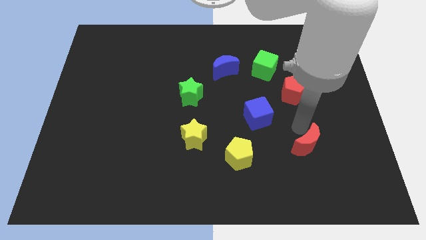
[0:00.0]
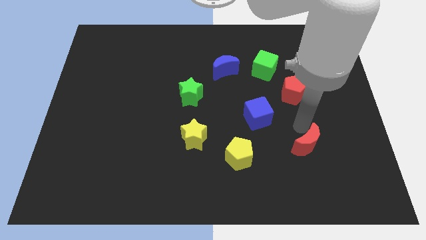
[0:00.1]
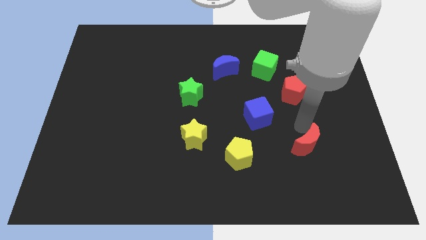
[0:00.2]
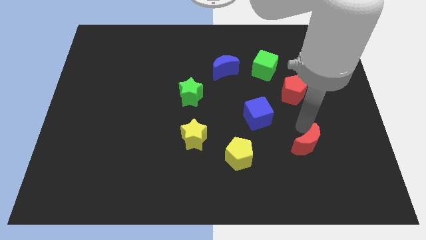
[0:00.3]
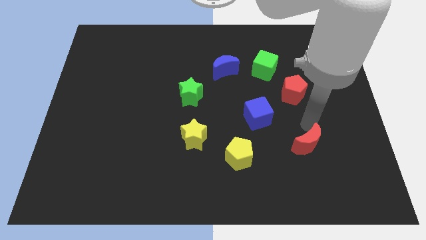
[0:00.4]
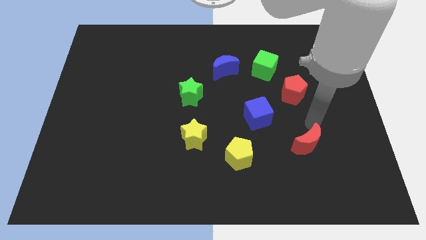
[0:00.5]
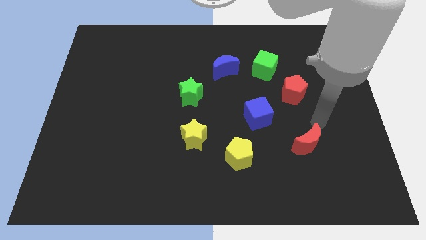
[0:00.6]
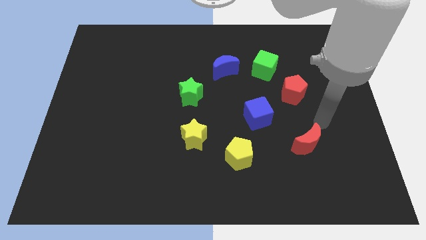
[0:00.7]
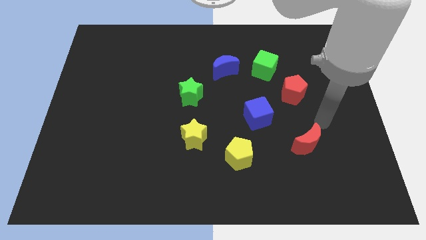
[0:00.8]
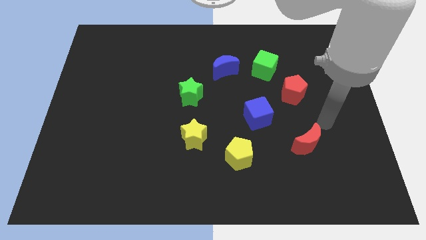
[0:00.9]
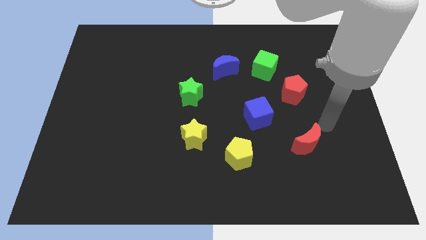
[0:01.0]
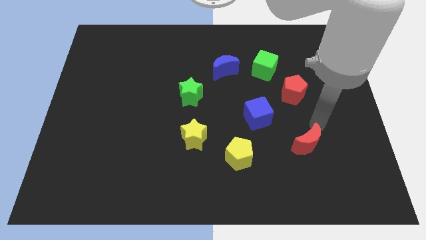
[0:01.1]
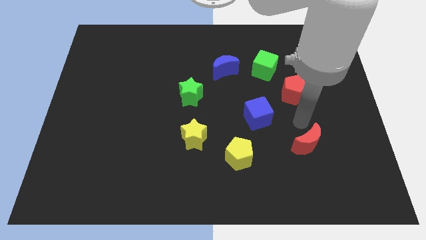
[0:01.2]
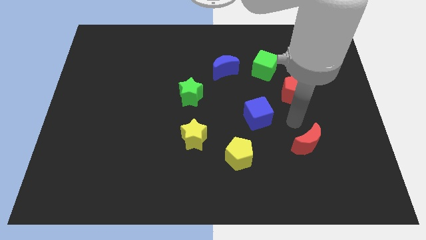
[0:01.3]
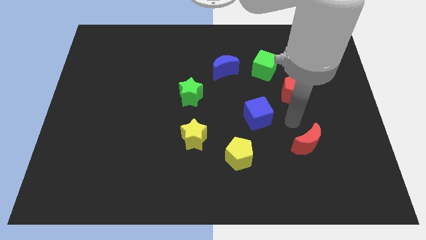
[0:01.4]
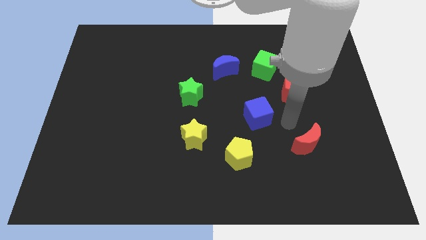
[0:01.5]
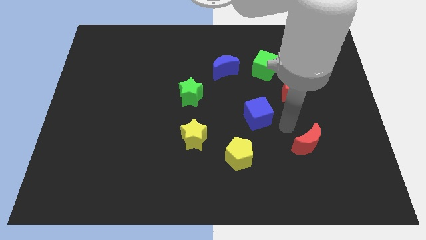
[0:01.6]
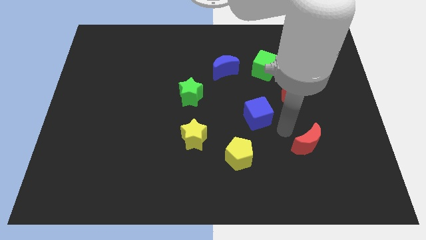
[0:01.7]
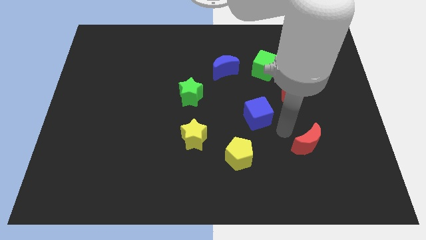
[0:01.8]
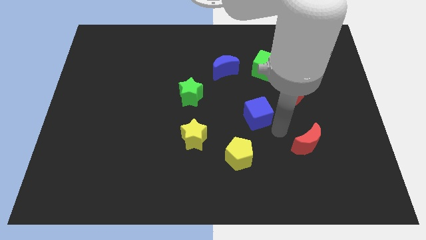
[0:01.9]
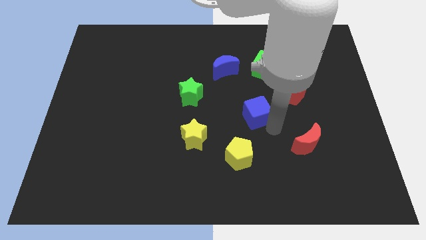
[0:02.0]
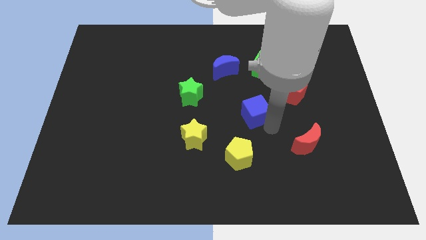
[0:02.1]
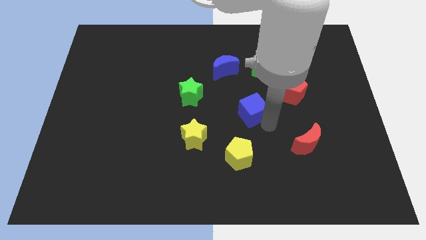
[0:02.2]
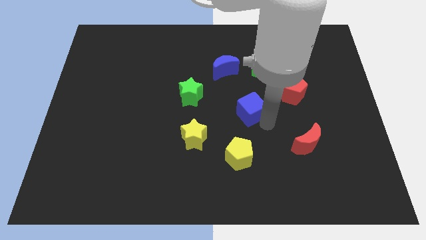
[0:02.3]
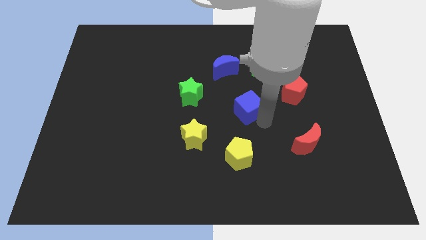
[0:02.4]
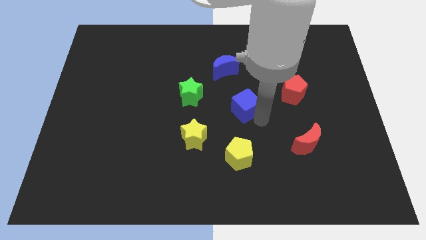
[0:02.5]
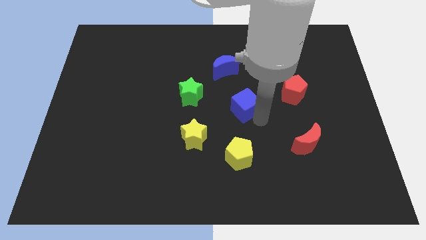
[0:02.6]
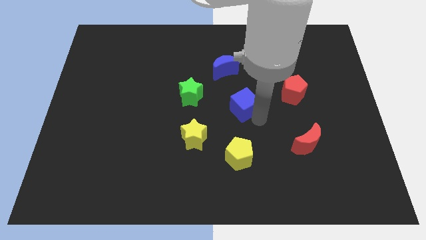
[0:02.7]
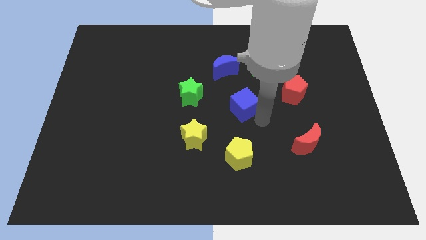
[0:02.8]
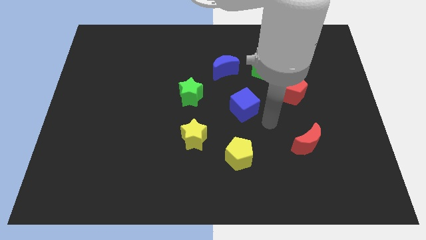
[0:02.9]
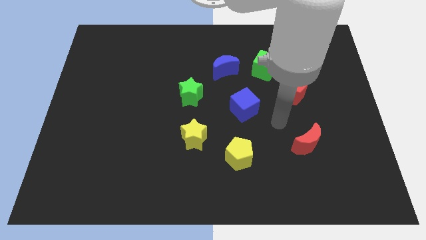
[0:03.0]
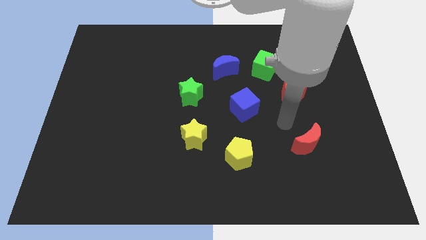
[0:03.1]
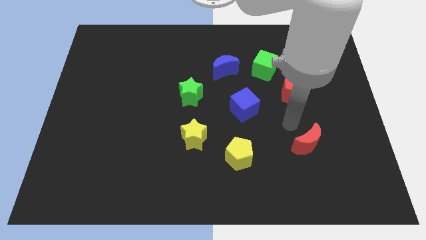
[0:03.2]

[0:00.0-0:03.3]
push the blue cube diagonall top right to yellow pentagon

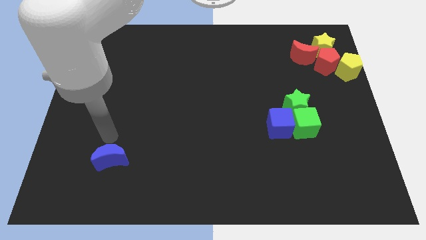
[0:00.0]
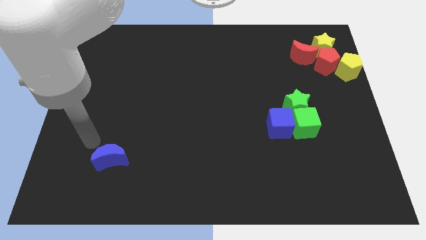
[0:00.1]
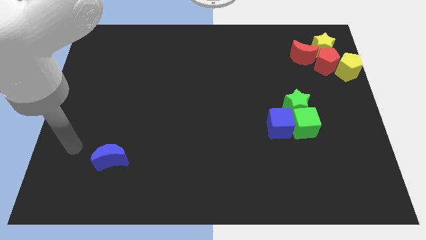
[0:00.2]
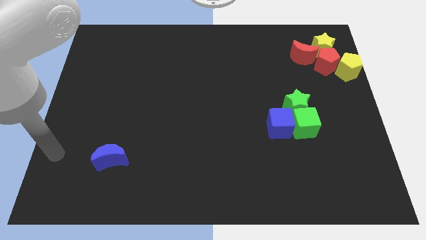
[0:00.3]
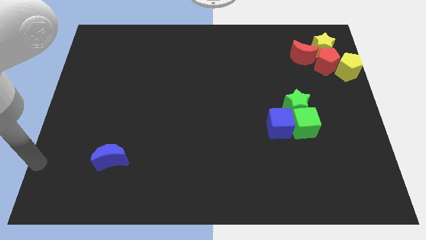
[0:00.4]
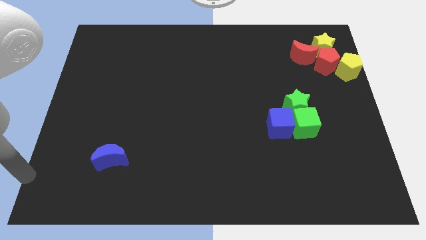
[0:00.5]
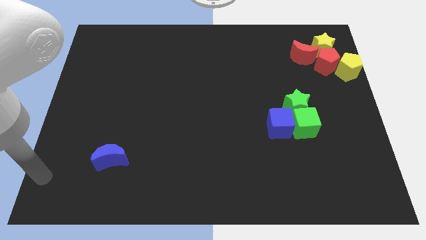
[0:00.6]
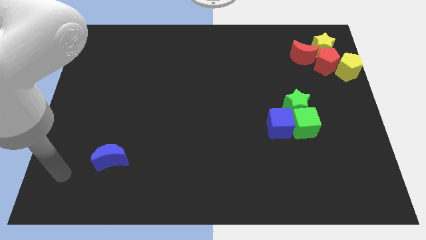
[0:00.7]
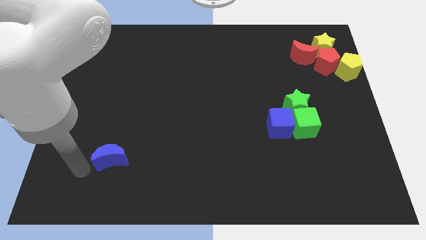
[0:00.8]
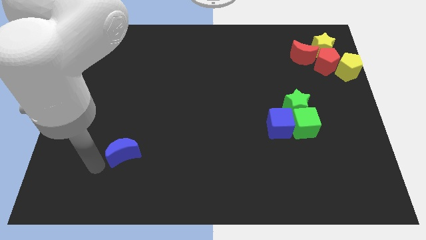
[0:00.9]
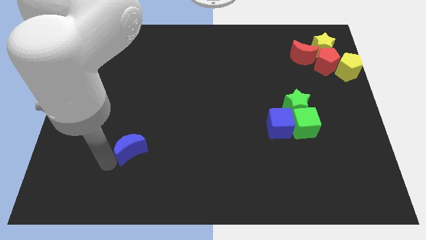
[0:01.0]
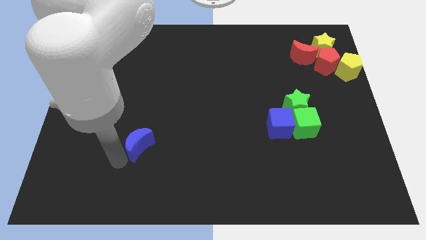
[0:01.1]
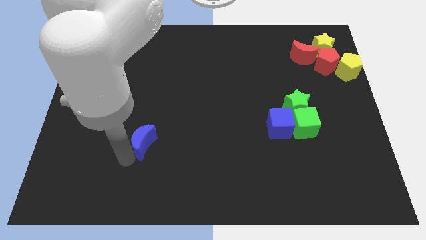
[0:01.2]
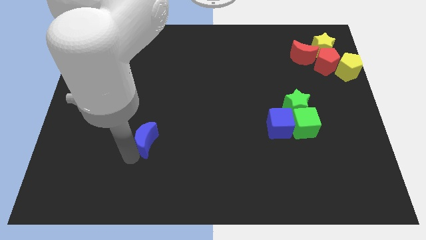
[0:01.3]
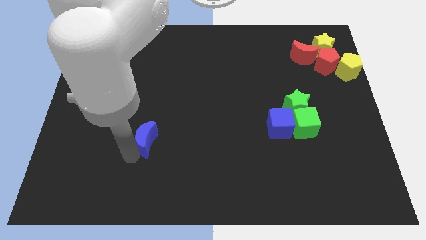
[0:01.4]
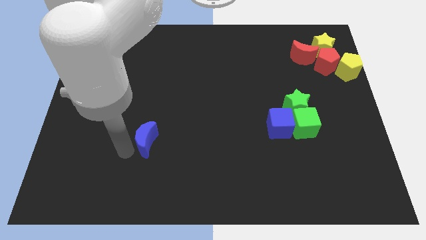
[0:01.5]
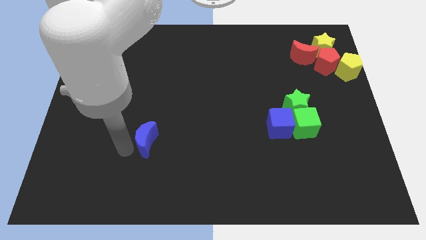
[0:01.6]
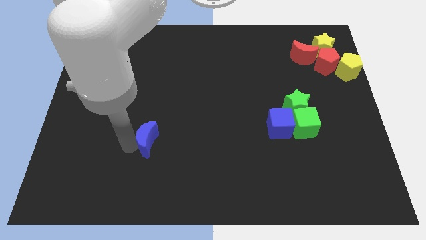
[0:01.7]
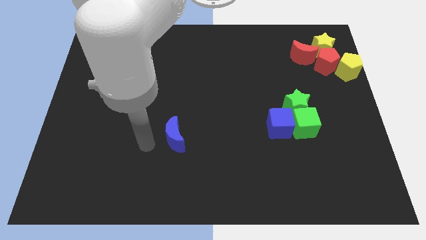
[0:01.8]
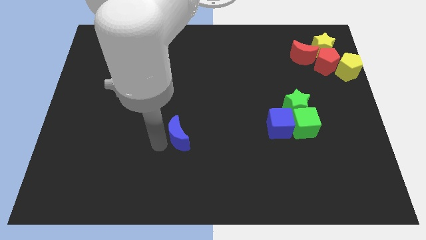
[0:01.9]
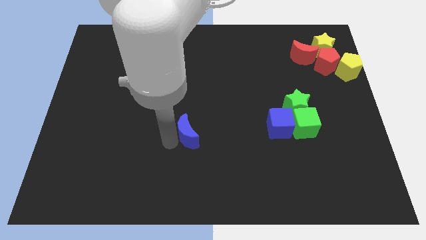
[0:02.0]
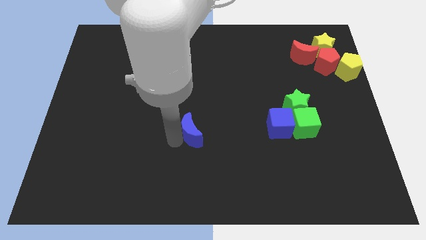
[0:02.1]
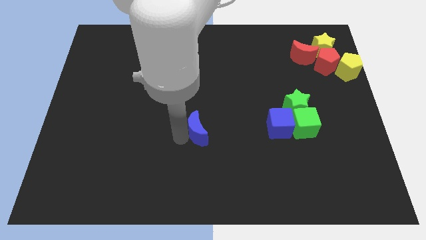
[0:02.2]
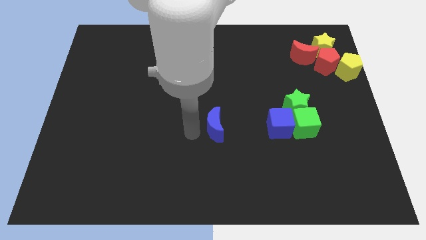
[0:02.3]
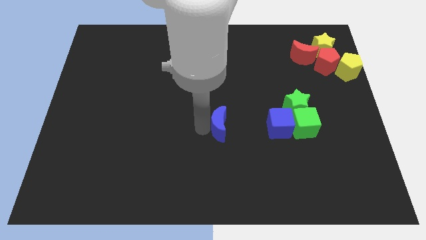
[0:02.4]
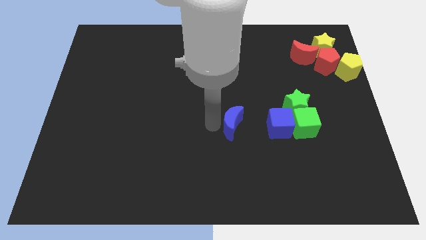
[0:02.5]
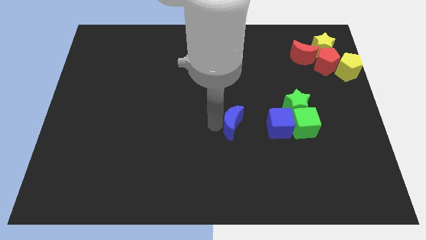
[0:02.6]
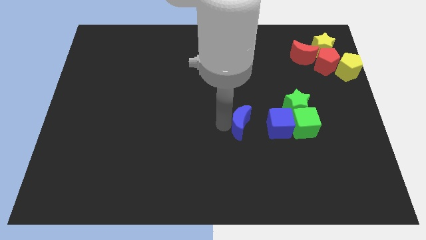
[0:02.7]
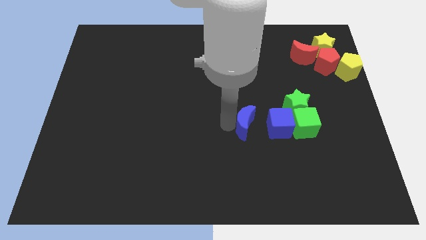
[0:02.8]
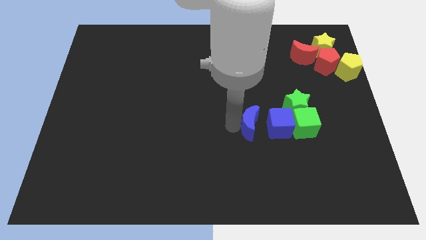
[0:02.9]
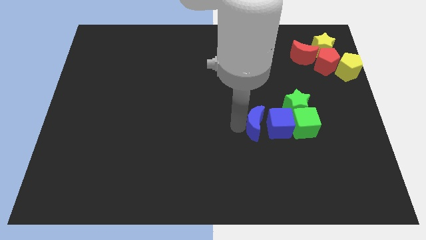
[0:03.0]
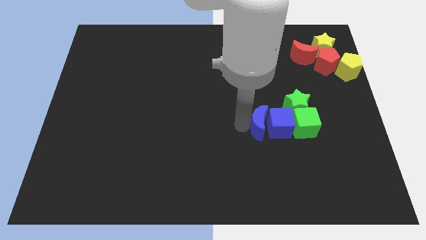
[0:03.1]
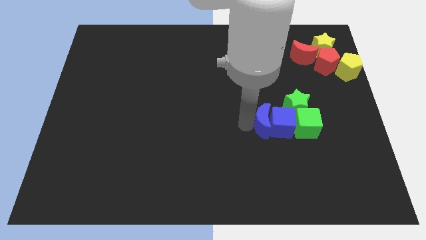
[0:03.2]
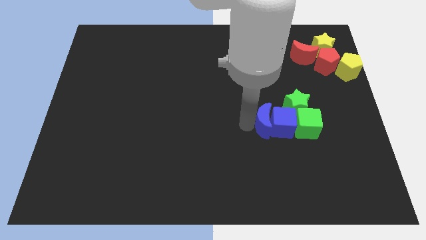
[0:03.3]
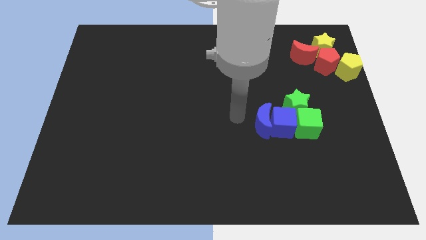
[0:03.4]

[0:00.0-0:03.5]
attach the blue moon to the blue cube

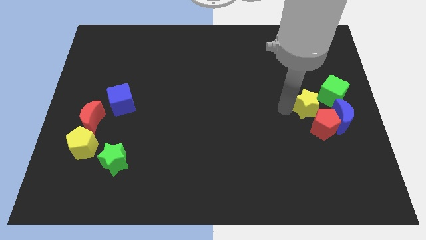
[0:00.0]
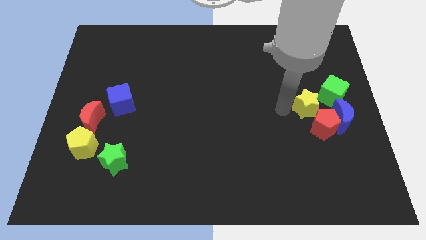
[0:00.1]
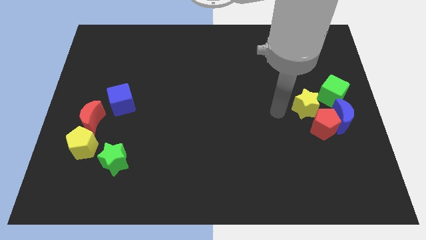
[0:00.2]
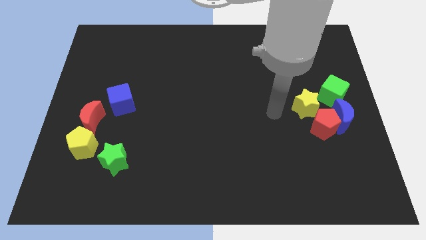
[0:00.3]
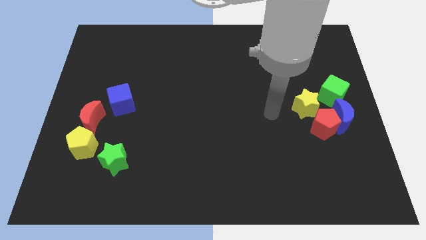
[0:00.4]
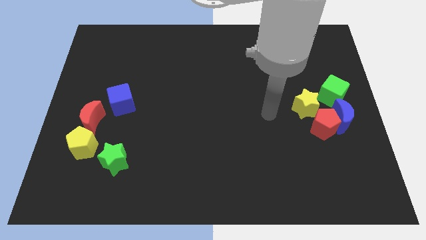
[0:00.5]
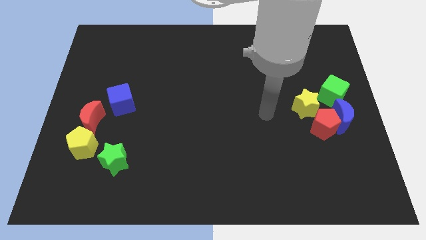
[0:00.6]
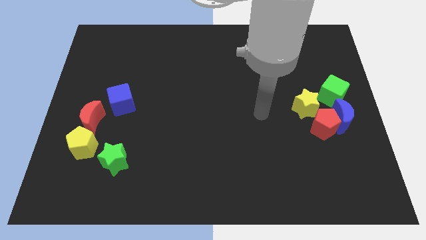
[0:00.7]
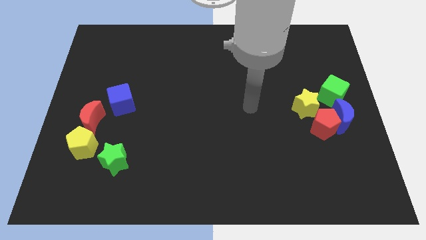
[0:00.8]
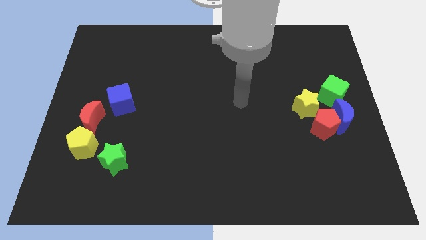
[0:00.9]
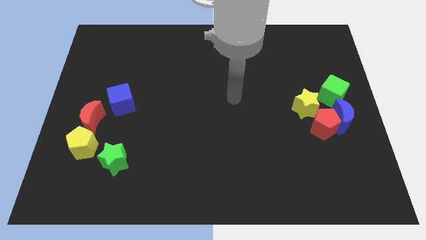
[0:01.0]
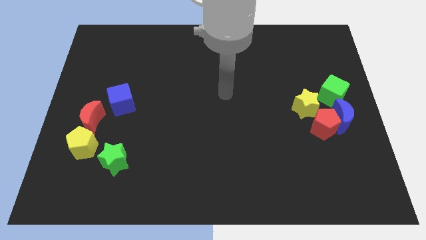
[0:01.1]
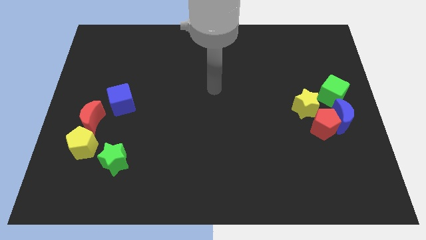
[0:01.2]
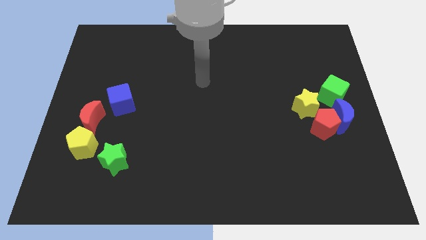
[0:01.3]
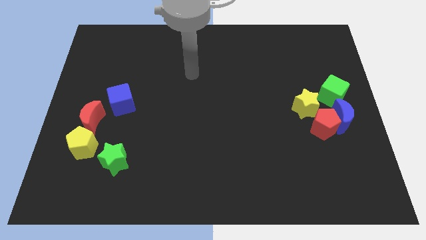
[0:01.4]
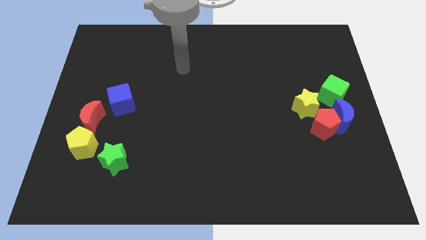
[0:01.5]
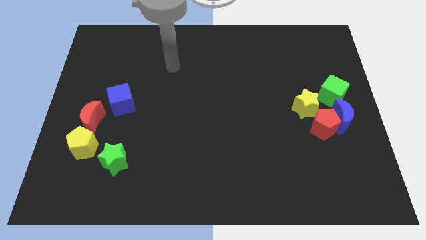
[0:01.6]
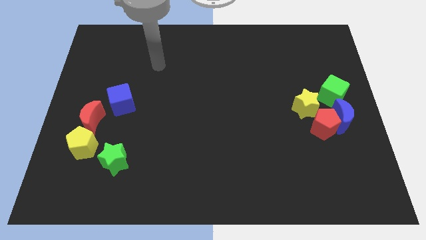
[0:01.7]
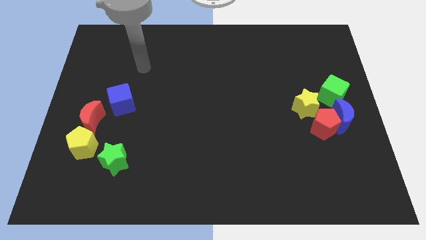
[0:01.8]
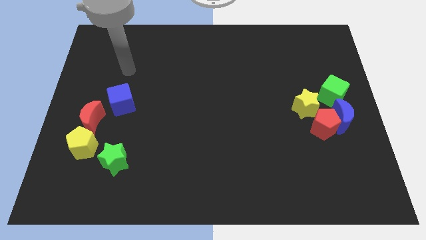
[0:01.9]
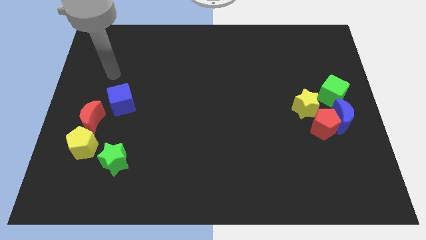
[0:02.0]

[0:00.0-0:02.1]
move the yellow star towards the green cube
